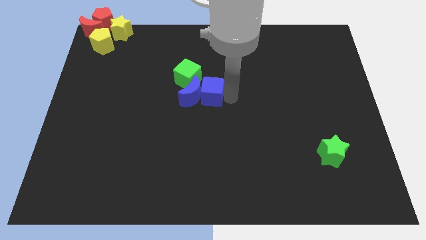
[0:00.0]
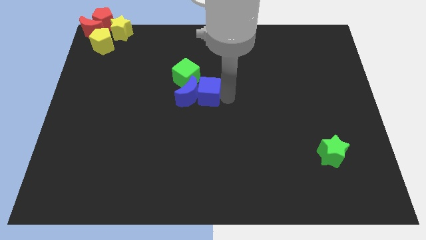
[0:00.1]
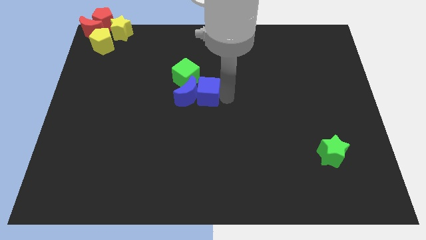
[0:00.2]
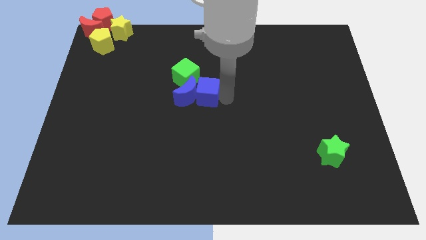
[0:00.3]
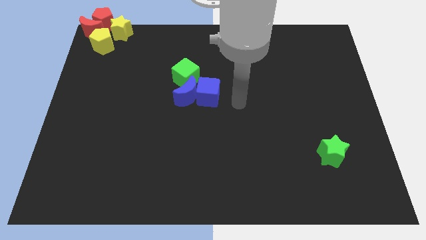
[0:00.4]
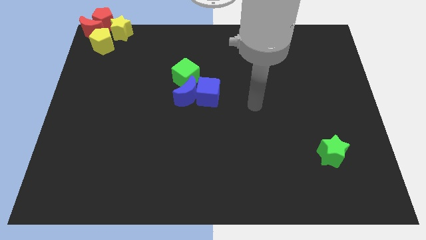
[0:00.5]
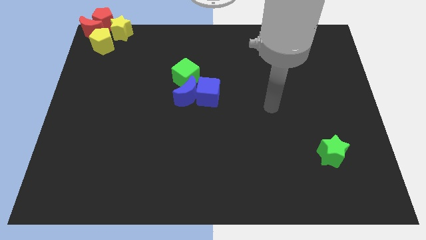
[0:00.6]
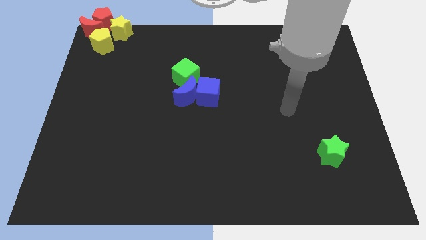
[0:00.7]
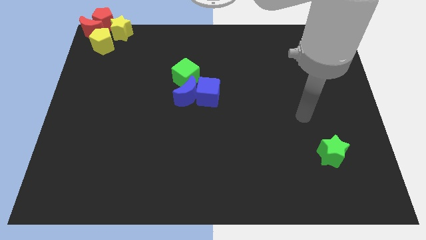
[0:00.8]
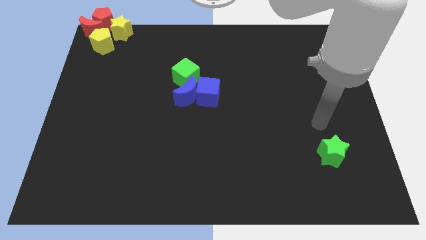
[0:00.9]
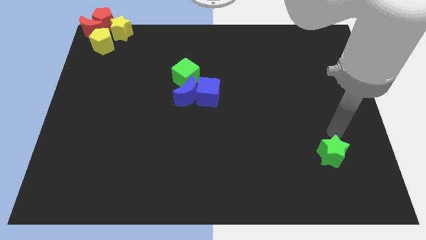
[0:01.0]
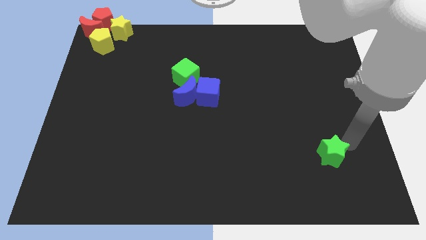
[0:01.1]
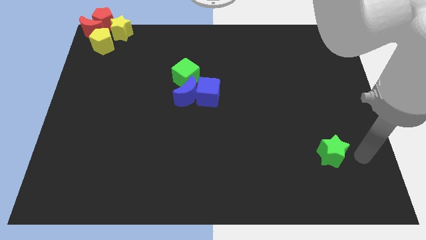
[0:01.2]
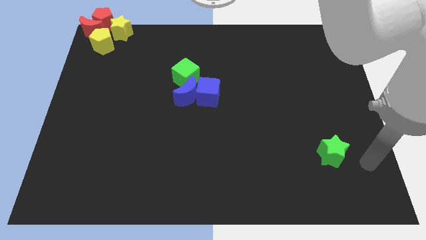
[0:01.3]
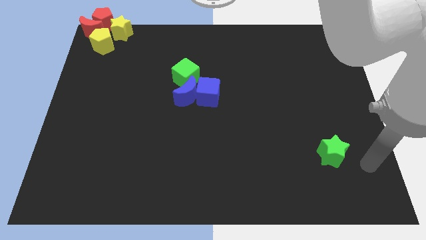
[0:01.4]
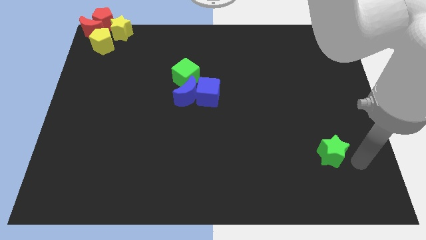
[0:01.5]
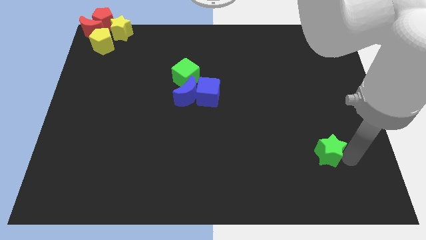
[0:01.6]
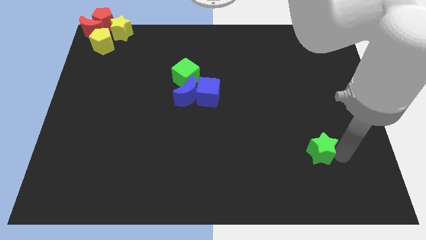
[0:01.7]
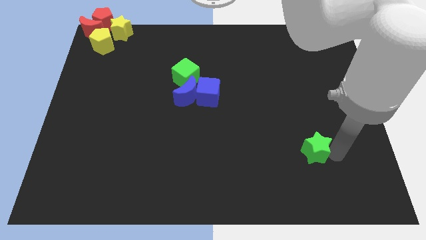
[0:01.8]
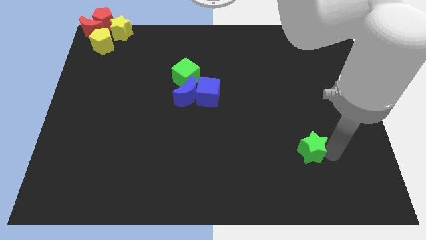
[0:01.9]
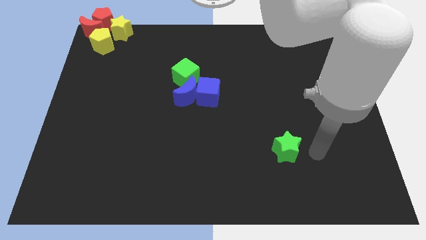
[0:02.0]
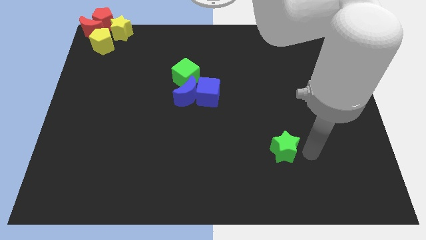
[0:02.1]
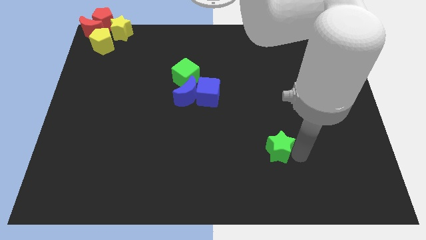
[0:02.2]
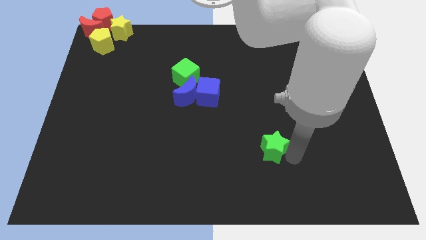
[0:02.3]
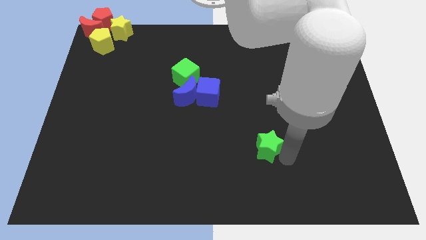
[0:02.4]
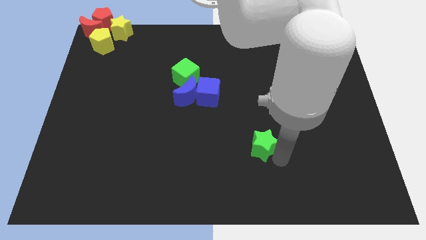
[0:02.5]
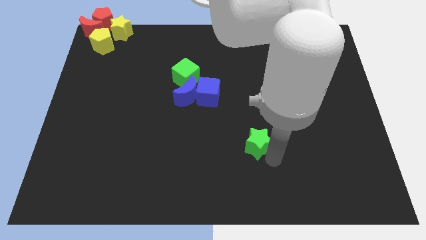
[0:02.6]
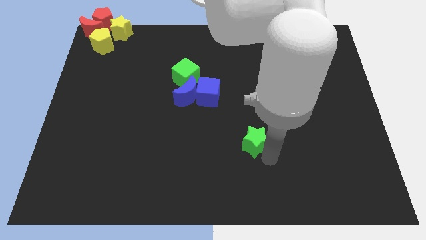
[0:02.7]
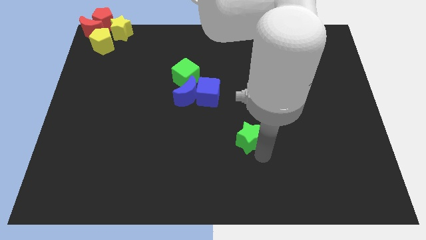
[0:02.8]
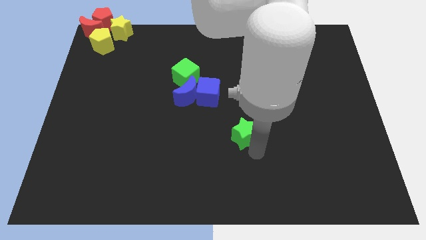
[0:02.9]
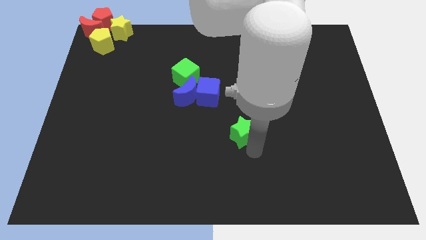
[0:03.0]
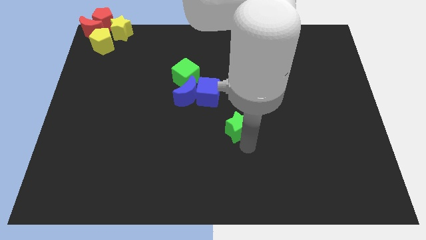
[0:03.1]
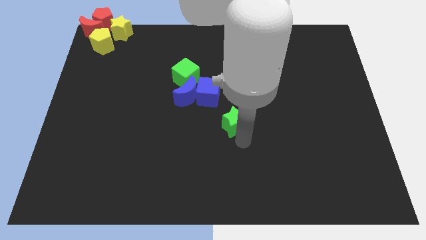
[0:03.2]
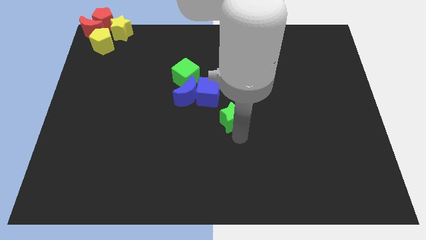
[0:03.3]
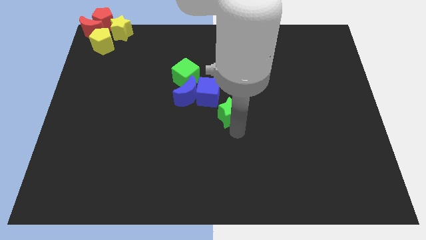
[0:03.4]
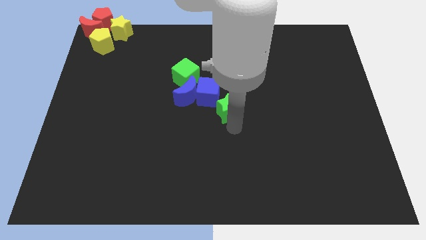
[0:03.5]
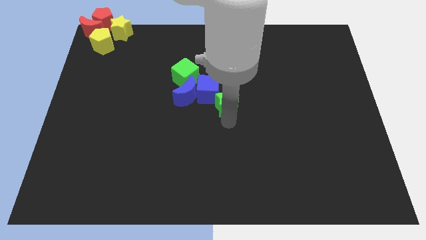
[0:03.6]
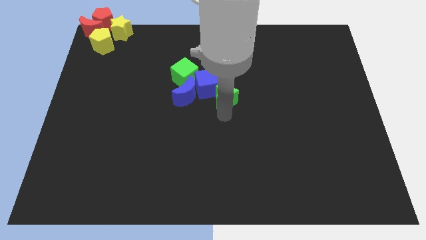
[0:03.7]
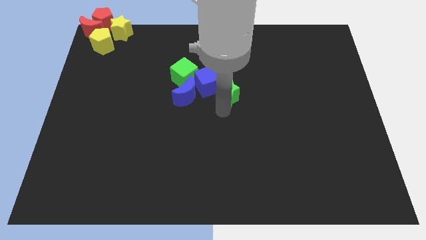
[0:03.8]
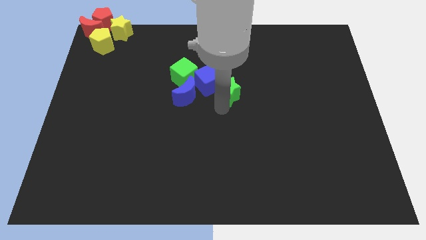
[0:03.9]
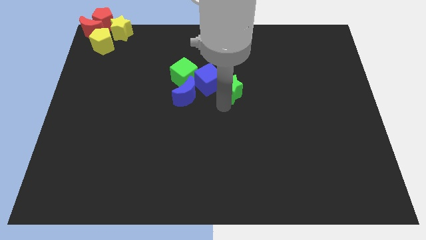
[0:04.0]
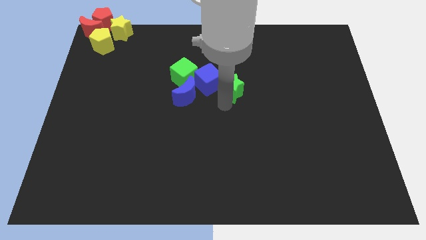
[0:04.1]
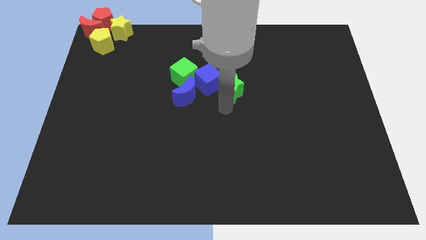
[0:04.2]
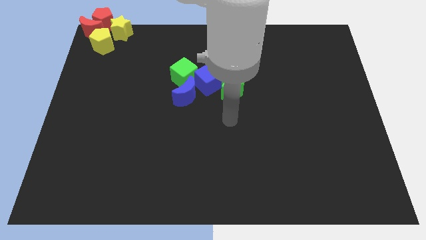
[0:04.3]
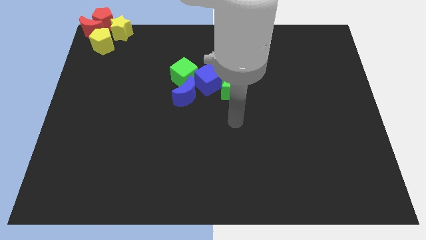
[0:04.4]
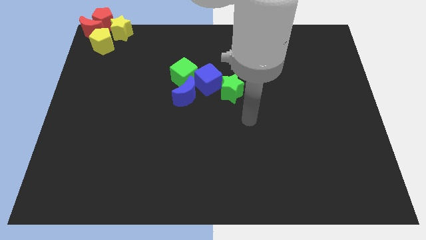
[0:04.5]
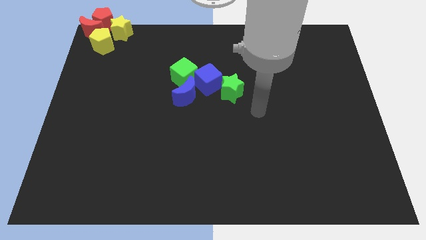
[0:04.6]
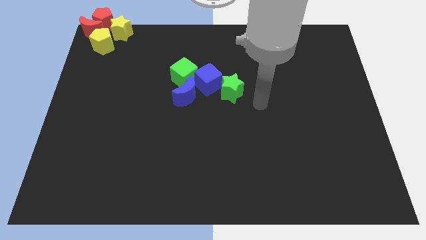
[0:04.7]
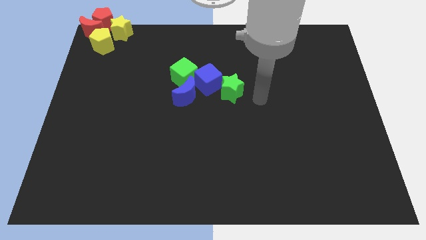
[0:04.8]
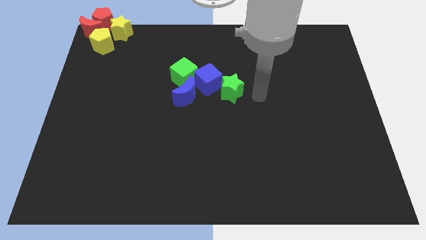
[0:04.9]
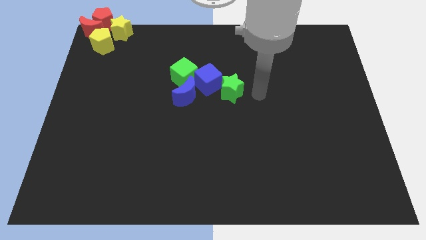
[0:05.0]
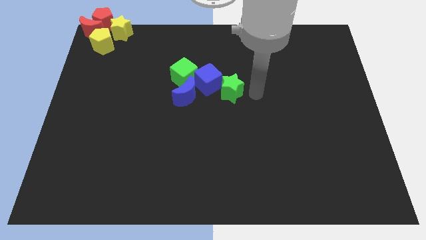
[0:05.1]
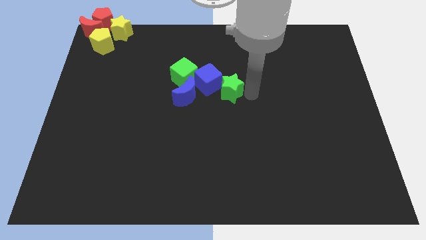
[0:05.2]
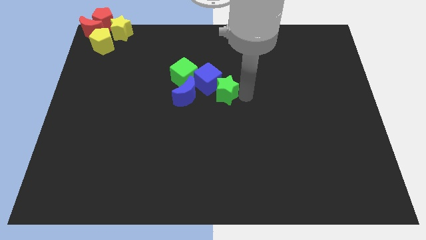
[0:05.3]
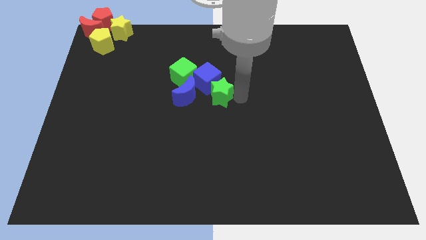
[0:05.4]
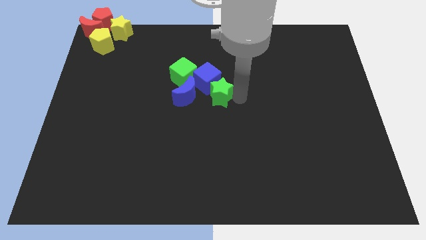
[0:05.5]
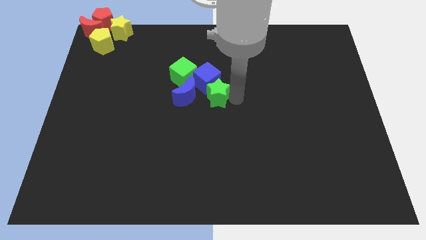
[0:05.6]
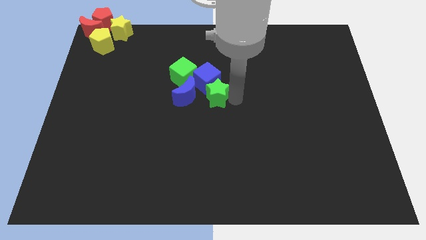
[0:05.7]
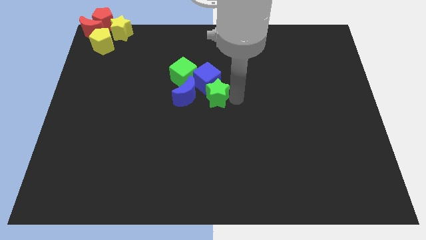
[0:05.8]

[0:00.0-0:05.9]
push the green star into the blue cube

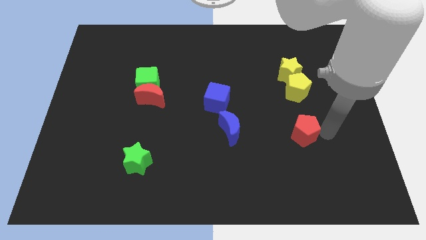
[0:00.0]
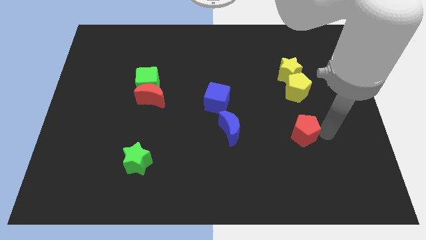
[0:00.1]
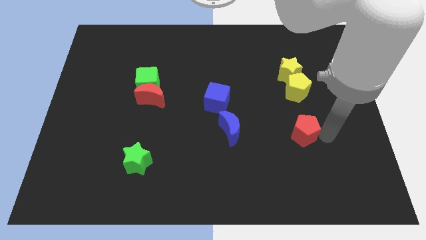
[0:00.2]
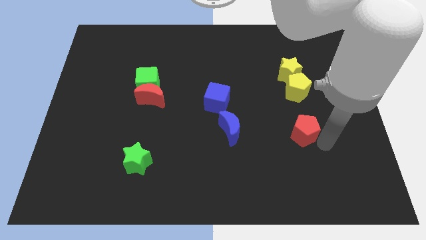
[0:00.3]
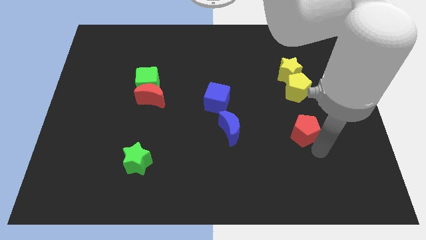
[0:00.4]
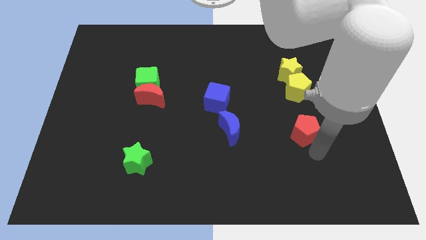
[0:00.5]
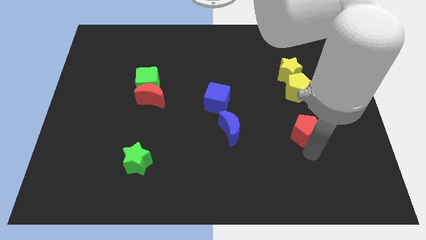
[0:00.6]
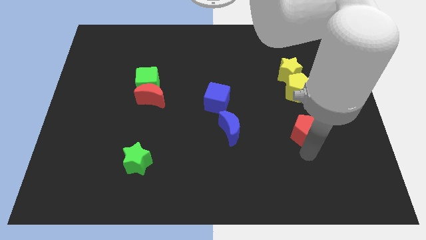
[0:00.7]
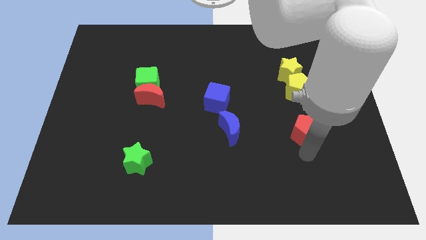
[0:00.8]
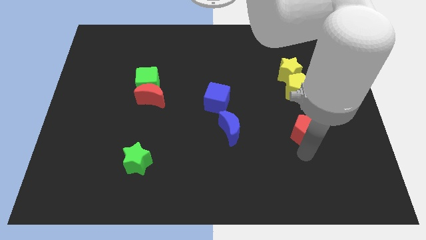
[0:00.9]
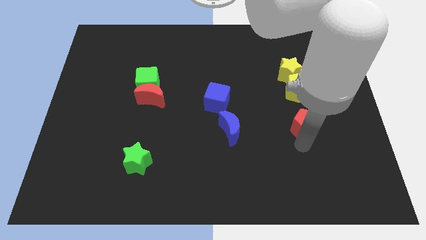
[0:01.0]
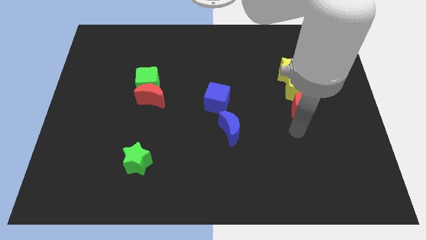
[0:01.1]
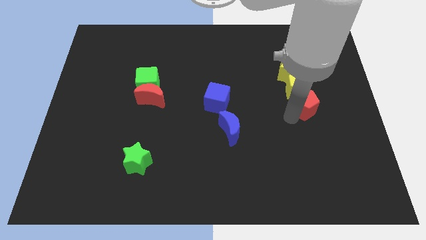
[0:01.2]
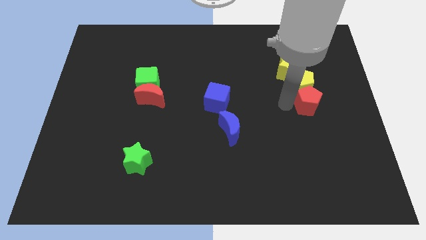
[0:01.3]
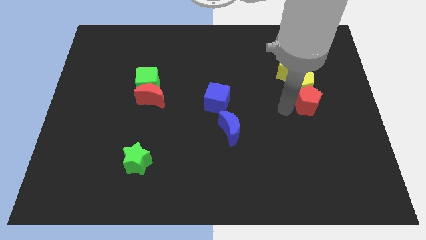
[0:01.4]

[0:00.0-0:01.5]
move the re pentagon to the bottom of the yellow pentagon

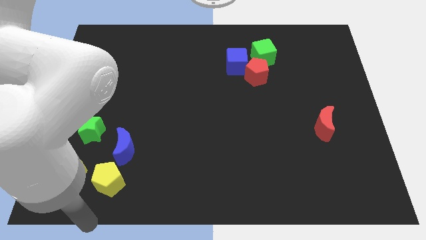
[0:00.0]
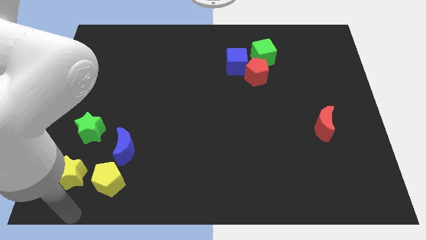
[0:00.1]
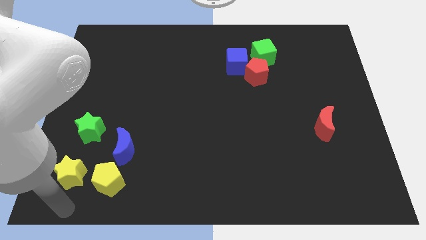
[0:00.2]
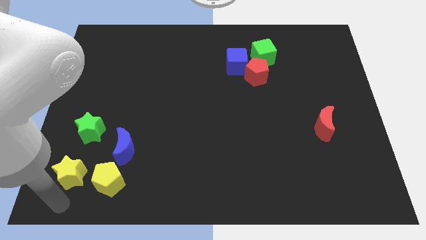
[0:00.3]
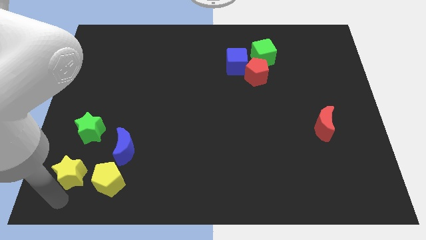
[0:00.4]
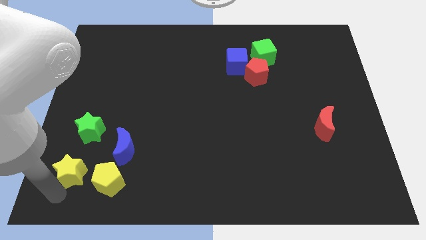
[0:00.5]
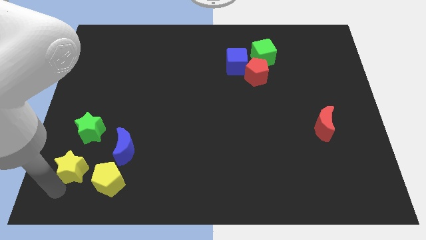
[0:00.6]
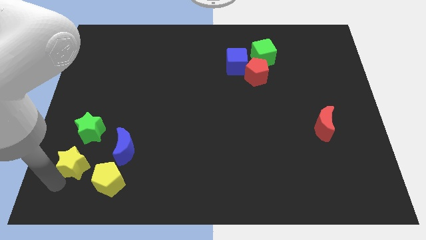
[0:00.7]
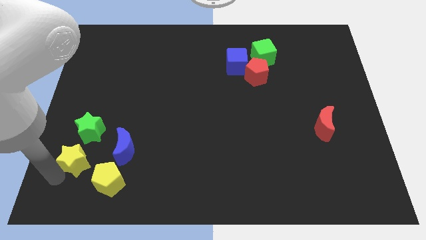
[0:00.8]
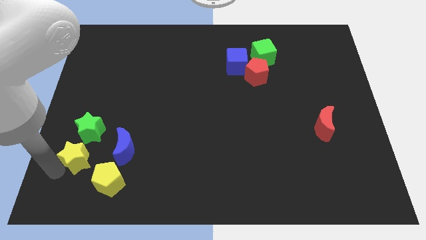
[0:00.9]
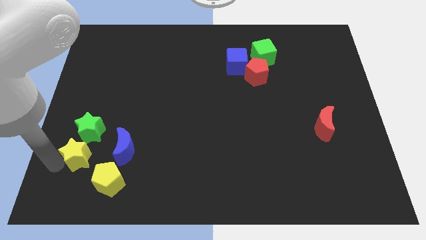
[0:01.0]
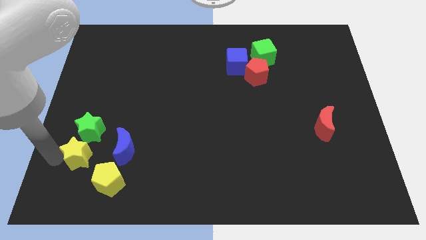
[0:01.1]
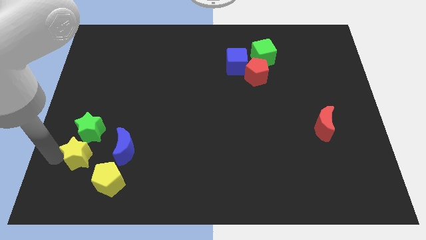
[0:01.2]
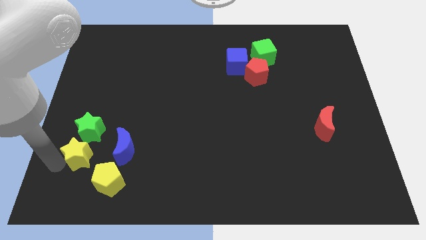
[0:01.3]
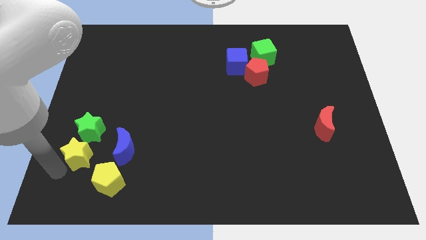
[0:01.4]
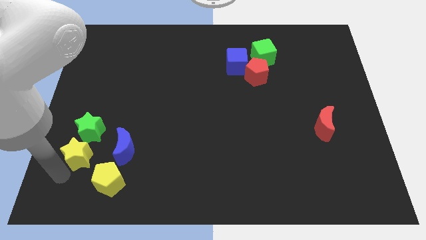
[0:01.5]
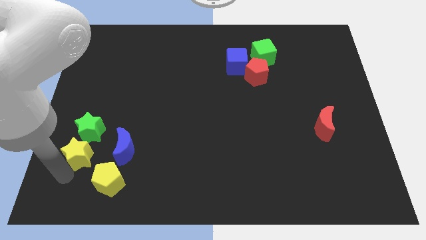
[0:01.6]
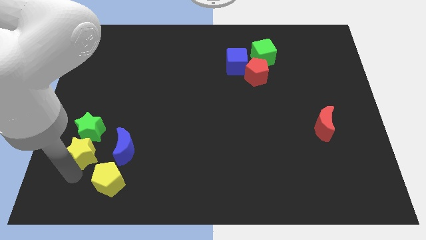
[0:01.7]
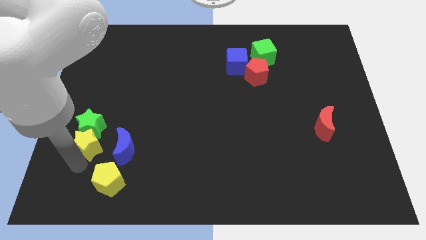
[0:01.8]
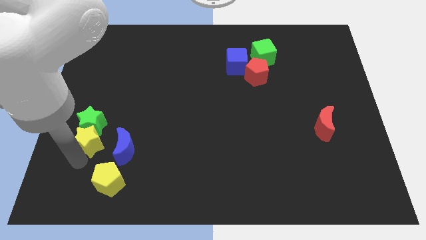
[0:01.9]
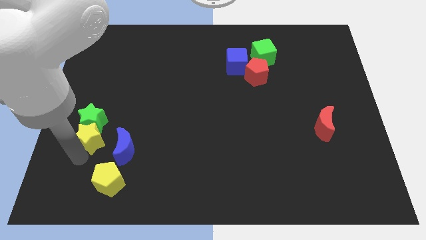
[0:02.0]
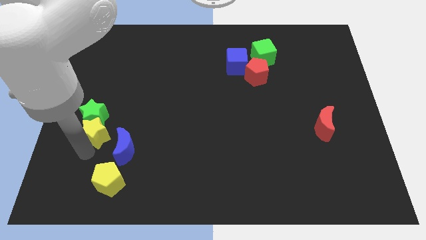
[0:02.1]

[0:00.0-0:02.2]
push the yellow star into the green star
